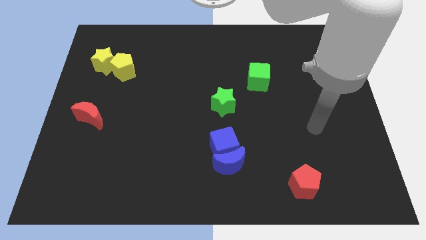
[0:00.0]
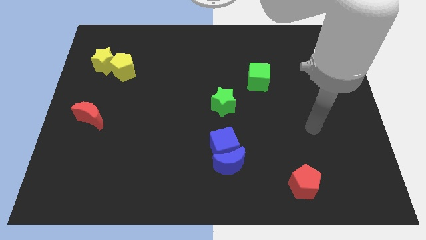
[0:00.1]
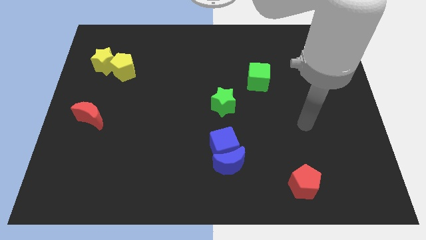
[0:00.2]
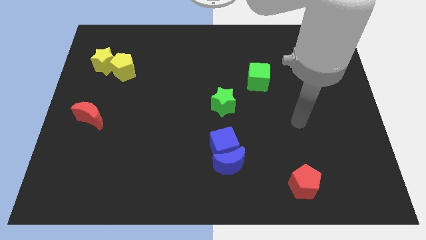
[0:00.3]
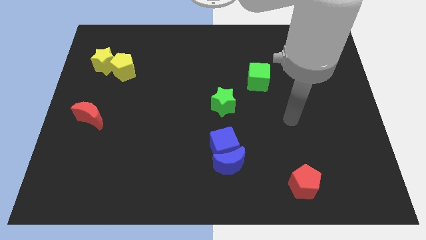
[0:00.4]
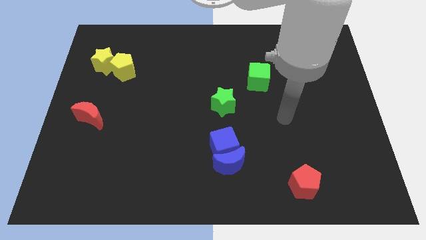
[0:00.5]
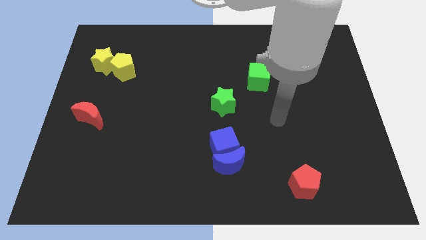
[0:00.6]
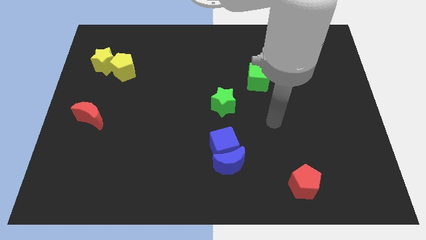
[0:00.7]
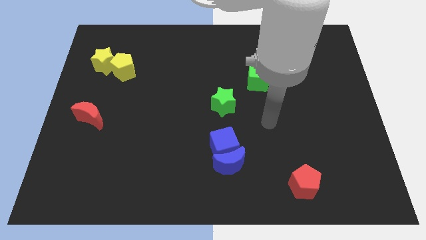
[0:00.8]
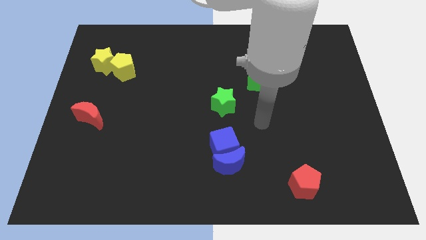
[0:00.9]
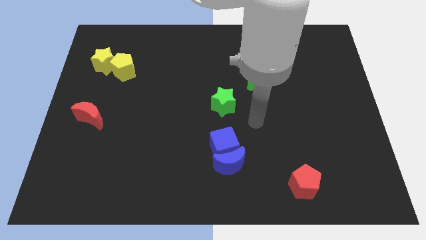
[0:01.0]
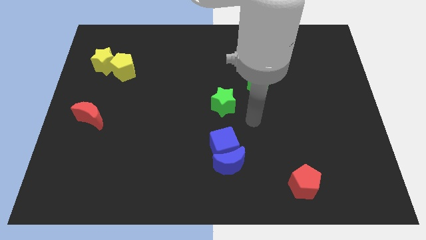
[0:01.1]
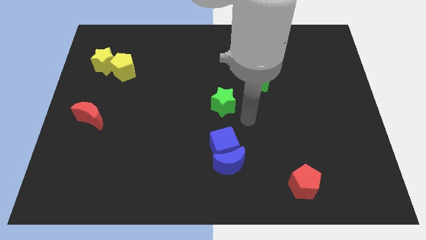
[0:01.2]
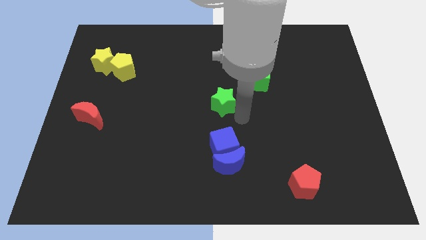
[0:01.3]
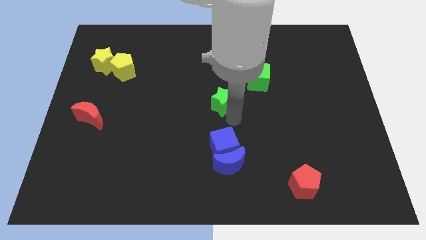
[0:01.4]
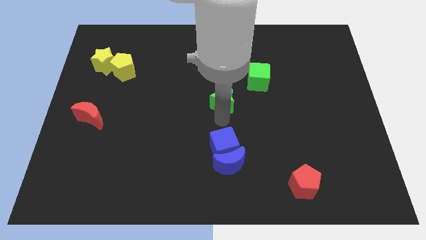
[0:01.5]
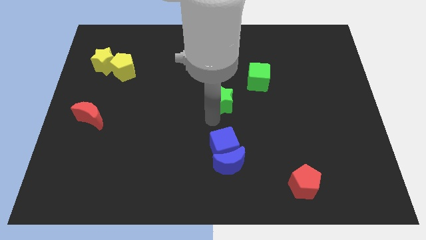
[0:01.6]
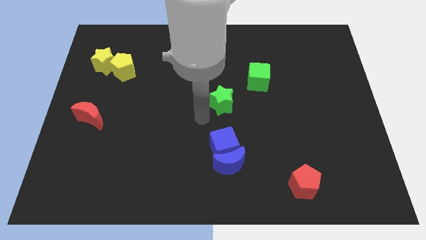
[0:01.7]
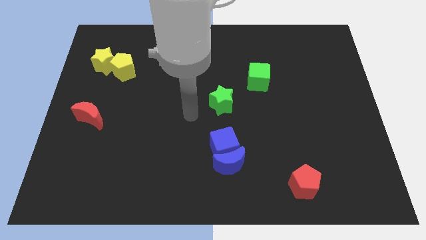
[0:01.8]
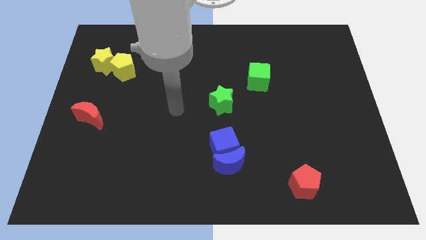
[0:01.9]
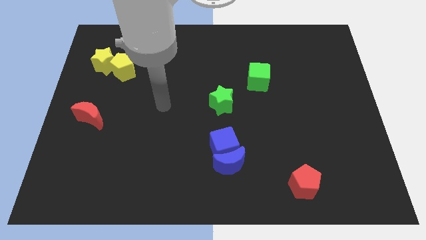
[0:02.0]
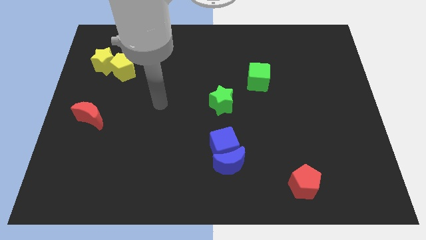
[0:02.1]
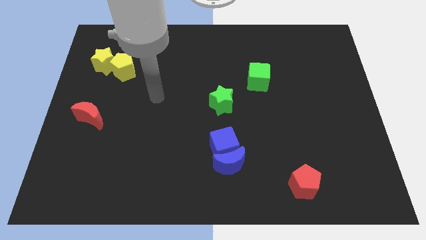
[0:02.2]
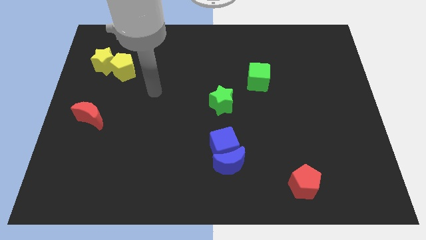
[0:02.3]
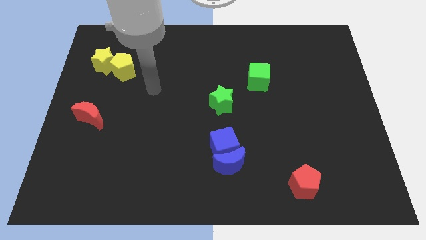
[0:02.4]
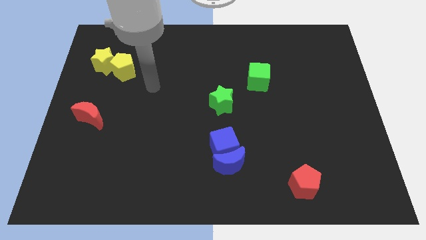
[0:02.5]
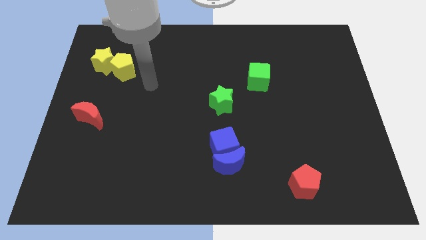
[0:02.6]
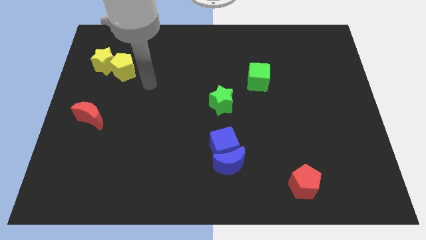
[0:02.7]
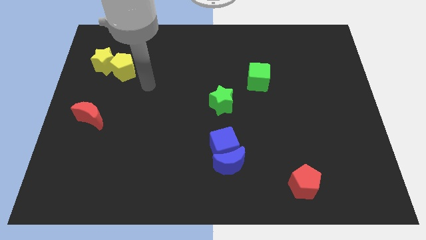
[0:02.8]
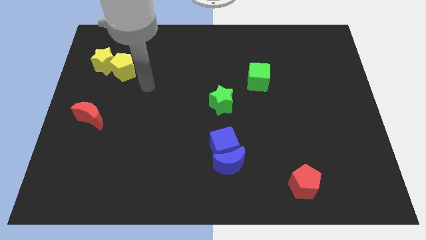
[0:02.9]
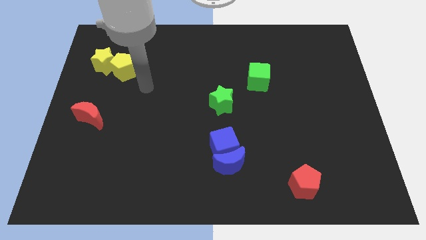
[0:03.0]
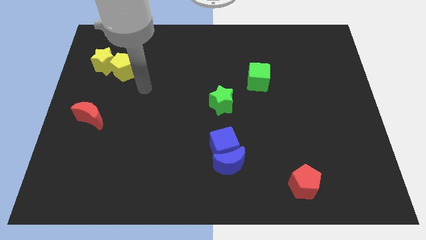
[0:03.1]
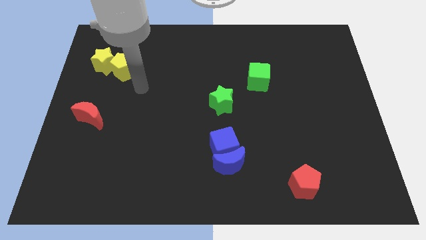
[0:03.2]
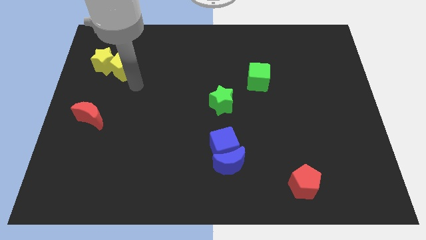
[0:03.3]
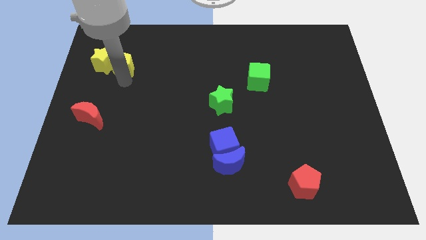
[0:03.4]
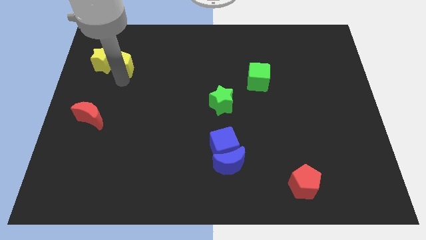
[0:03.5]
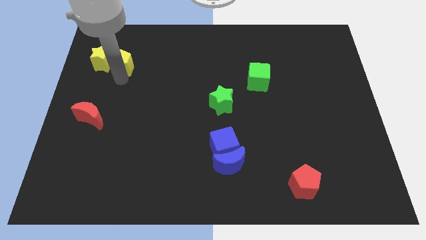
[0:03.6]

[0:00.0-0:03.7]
move close to the yellow pentagon

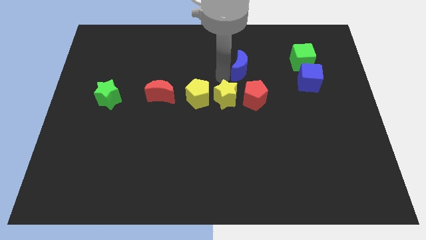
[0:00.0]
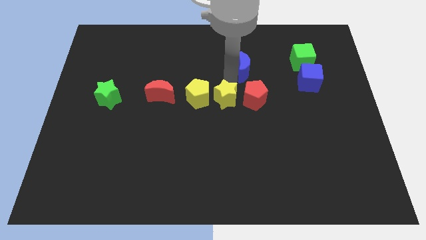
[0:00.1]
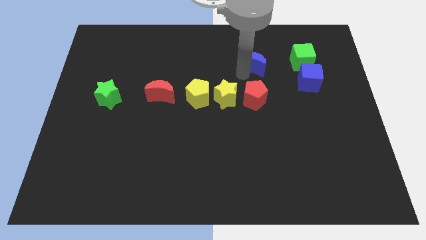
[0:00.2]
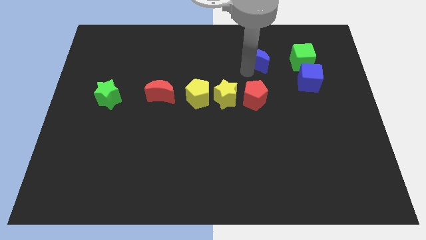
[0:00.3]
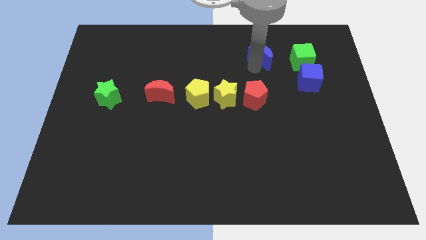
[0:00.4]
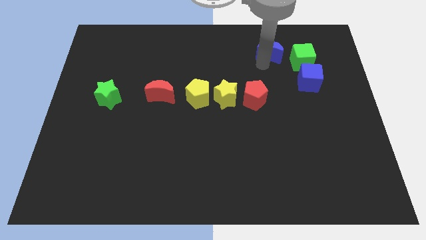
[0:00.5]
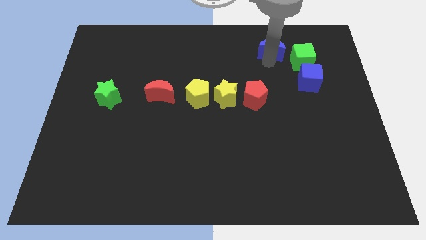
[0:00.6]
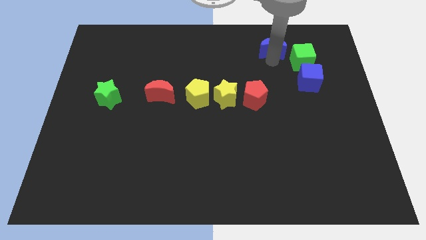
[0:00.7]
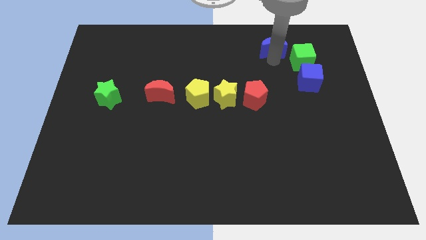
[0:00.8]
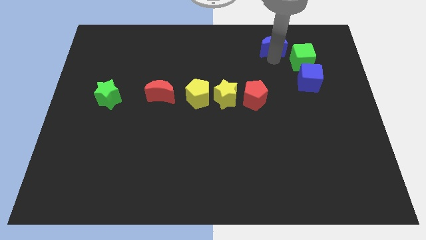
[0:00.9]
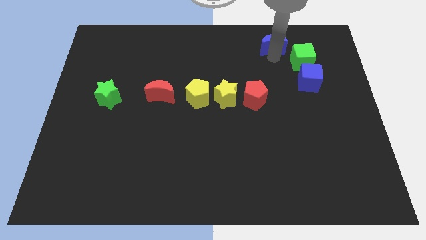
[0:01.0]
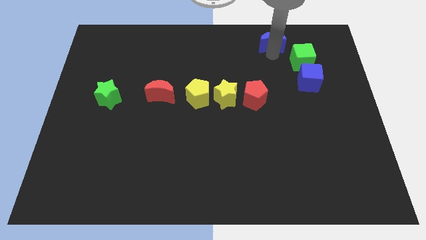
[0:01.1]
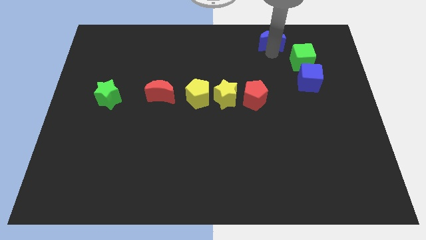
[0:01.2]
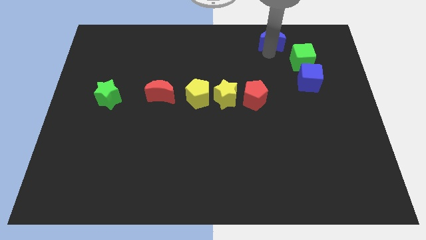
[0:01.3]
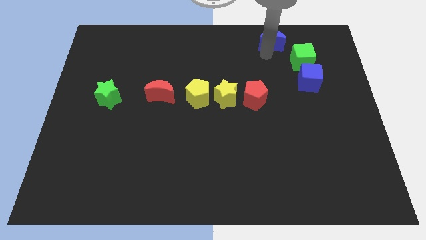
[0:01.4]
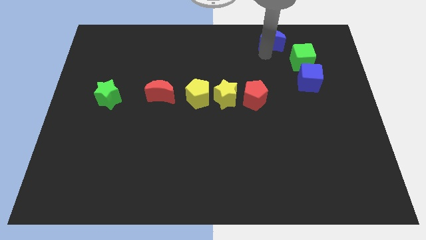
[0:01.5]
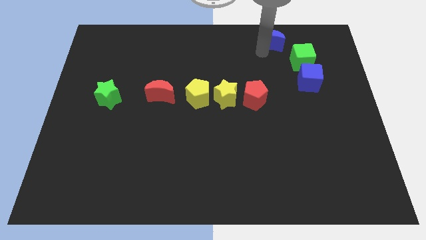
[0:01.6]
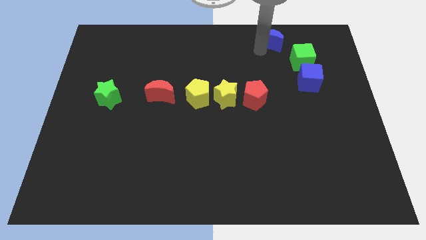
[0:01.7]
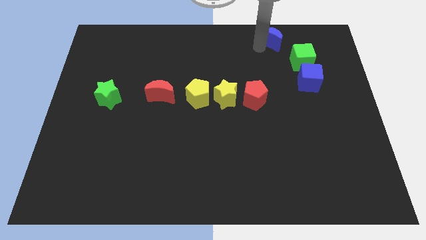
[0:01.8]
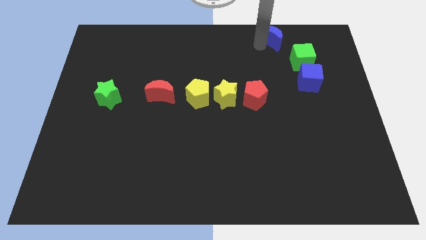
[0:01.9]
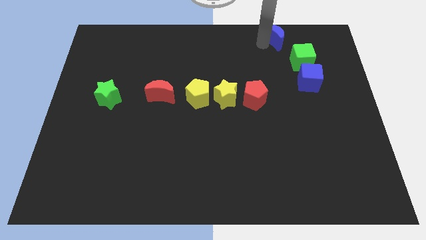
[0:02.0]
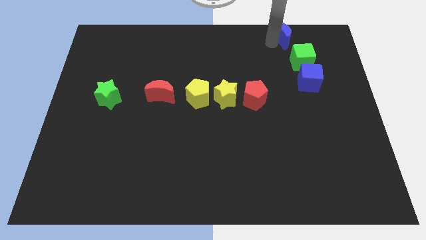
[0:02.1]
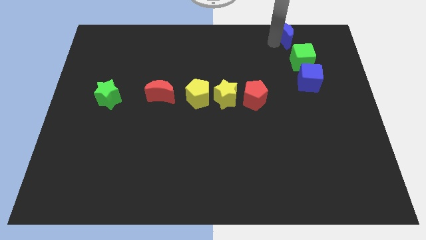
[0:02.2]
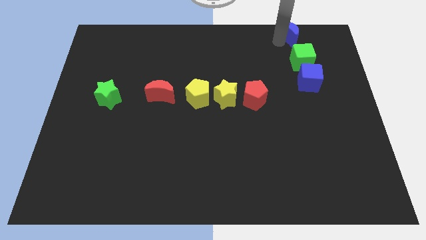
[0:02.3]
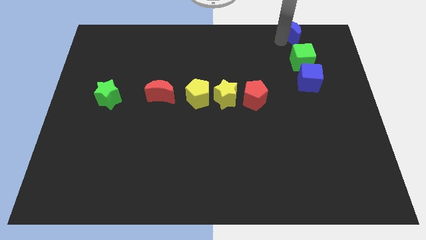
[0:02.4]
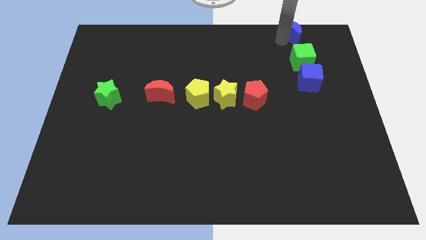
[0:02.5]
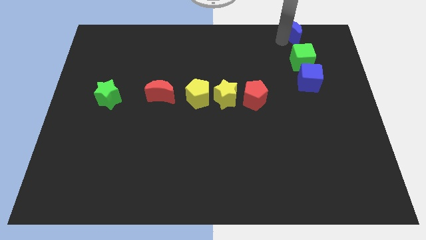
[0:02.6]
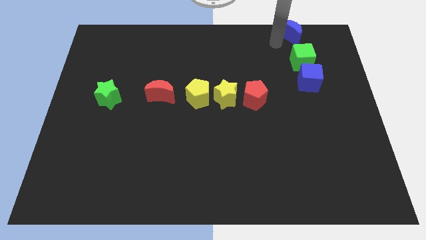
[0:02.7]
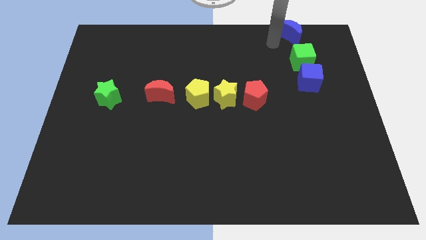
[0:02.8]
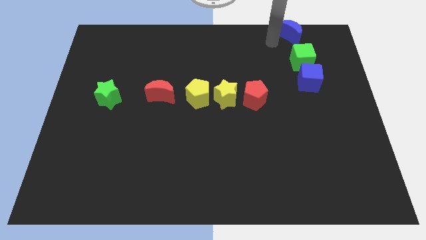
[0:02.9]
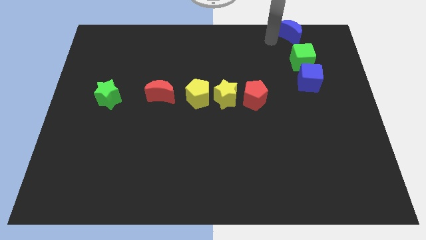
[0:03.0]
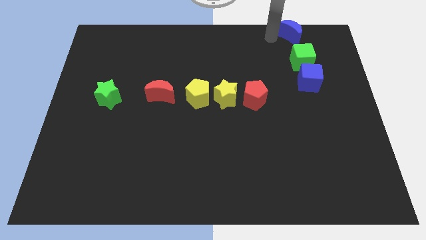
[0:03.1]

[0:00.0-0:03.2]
push the blue moon to the top right side of the board

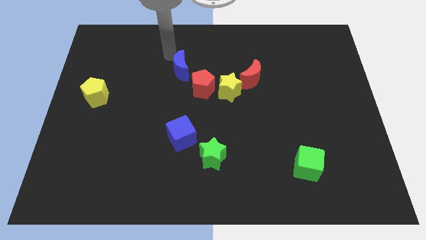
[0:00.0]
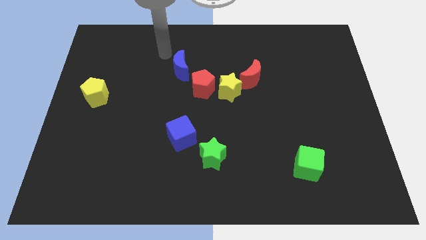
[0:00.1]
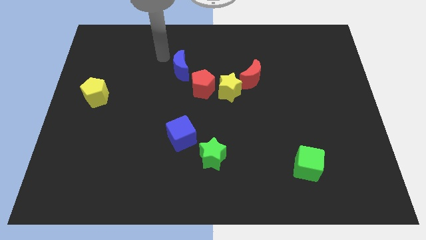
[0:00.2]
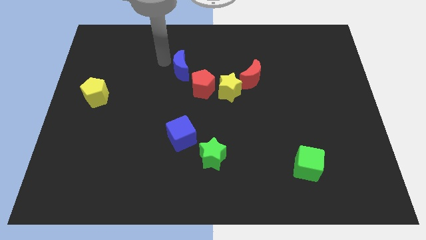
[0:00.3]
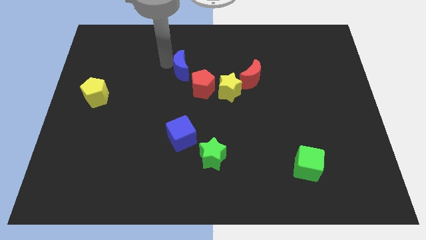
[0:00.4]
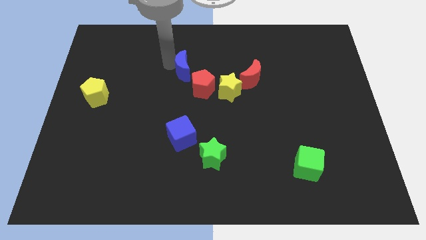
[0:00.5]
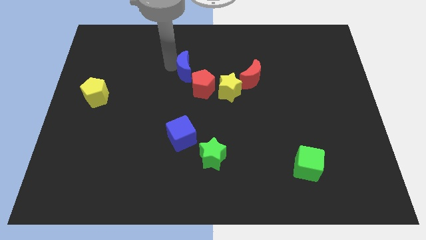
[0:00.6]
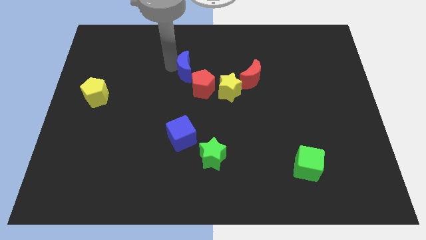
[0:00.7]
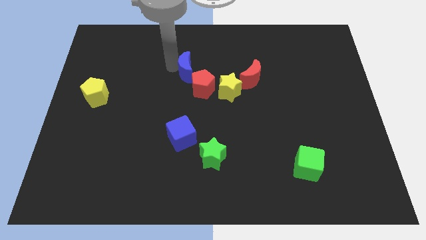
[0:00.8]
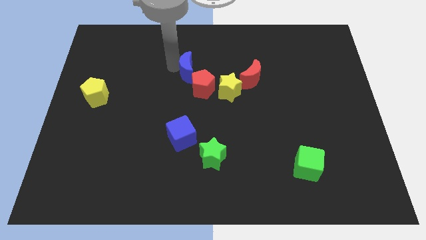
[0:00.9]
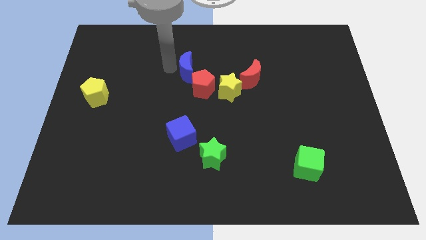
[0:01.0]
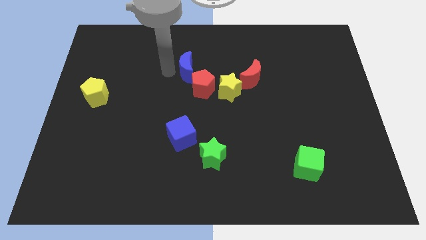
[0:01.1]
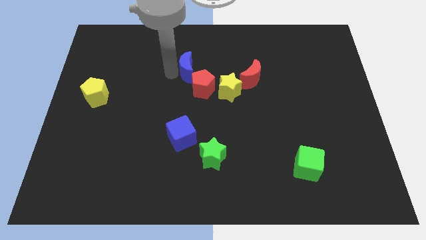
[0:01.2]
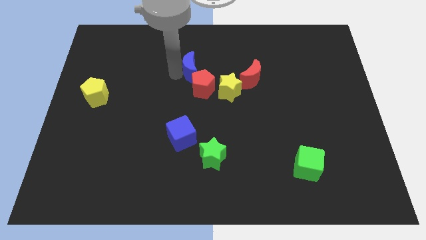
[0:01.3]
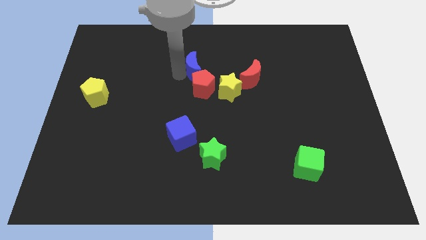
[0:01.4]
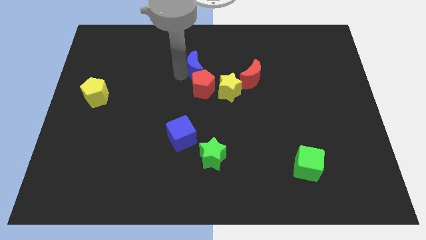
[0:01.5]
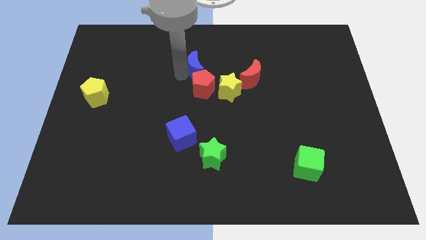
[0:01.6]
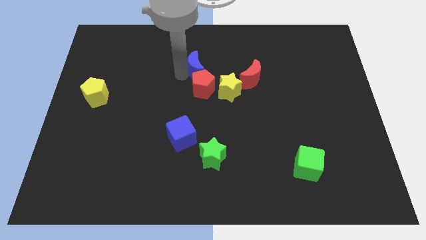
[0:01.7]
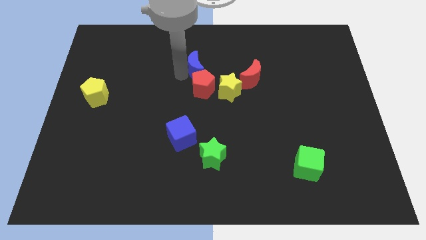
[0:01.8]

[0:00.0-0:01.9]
push the blue crescent to the top left to the red pentagon
